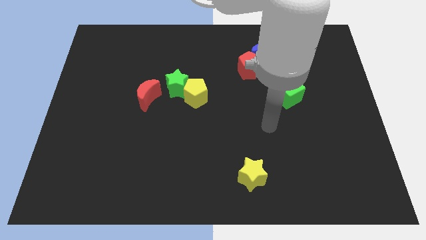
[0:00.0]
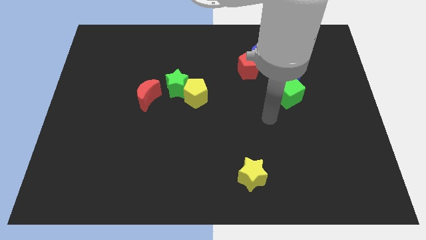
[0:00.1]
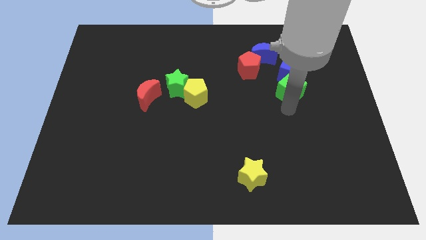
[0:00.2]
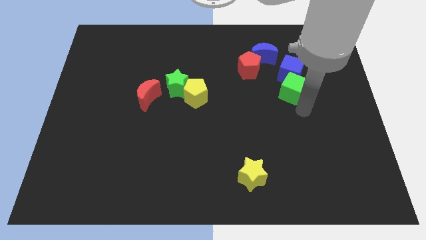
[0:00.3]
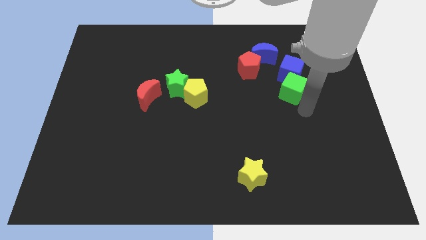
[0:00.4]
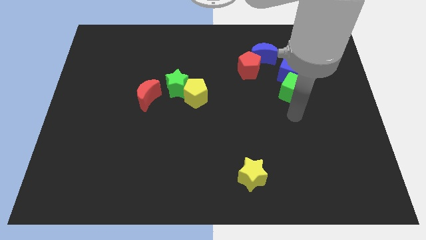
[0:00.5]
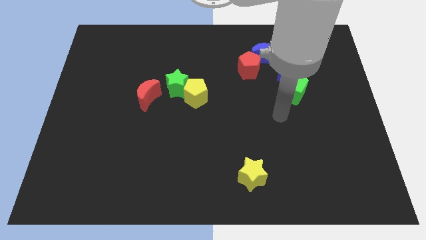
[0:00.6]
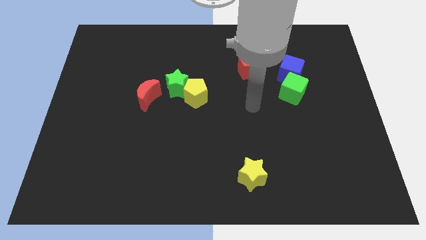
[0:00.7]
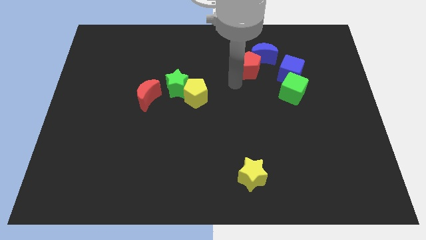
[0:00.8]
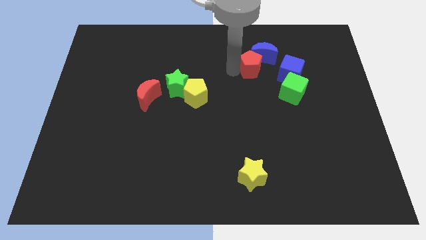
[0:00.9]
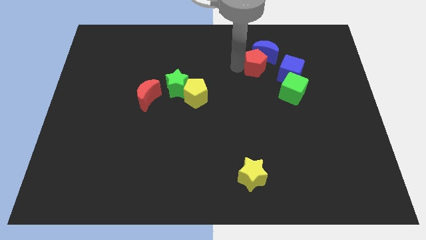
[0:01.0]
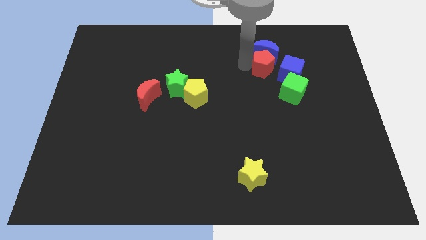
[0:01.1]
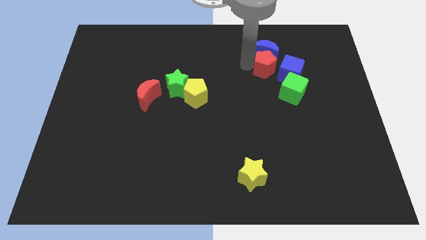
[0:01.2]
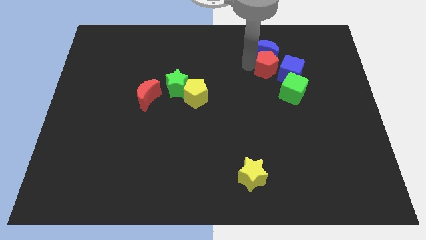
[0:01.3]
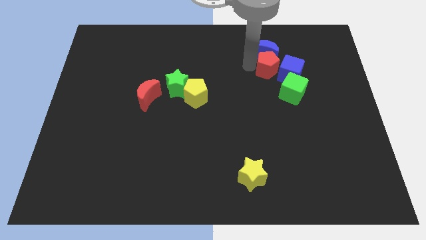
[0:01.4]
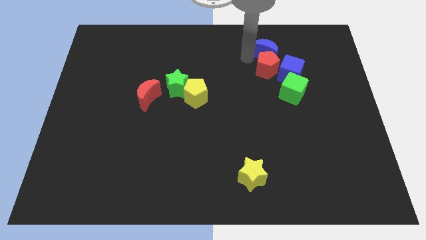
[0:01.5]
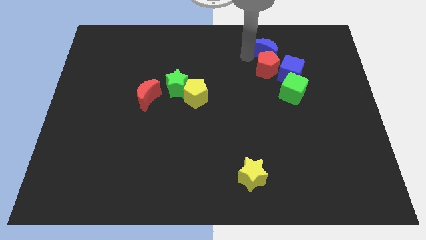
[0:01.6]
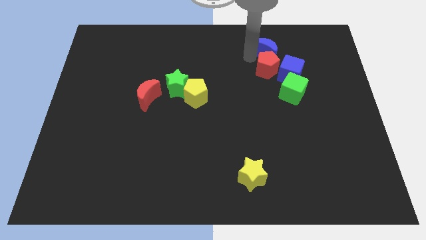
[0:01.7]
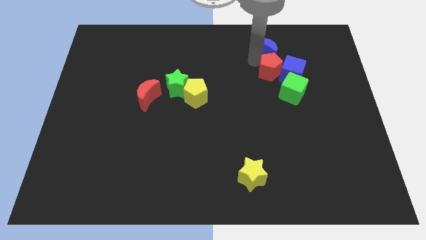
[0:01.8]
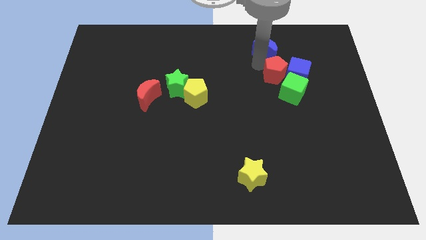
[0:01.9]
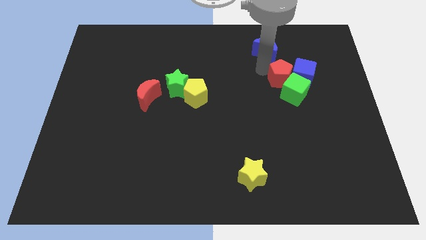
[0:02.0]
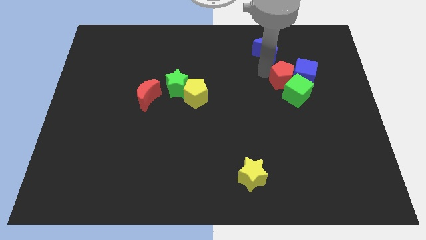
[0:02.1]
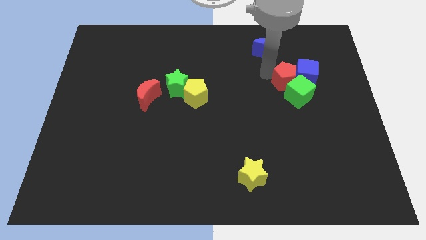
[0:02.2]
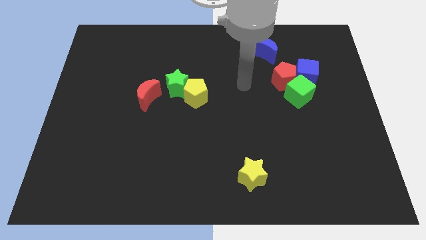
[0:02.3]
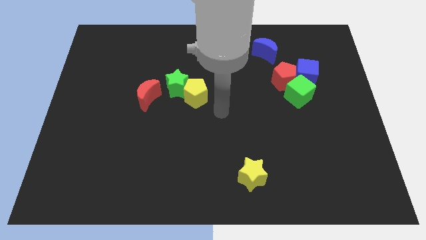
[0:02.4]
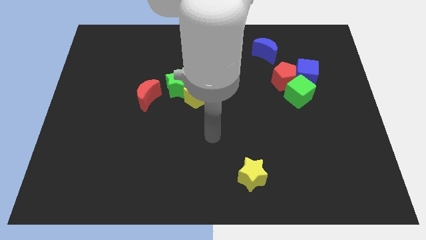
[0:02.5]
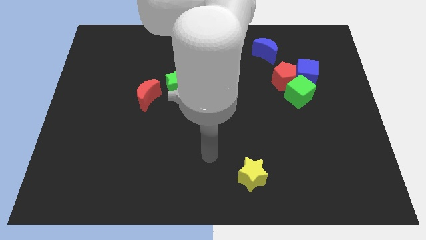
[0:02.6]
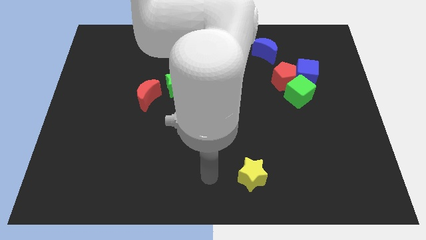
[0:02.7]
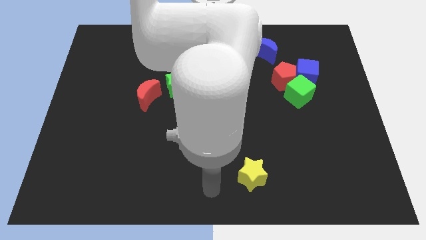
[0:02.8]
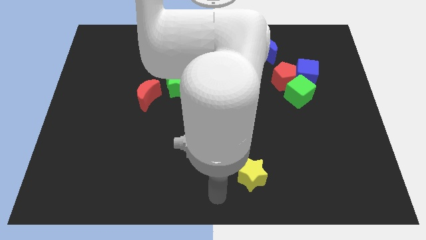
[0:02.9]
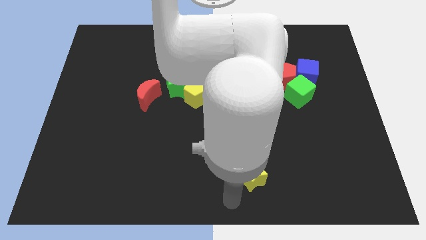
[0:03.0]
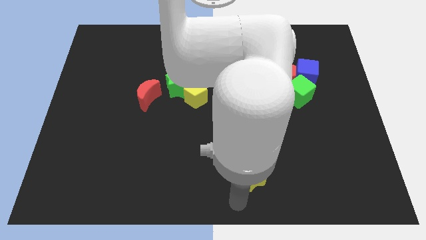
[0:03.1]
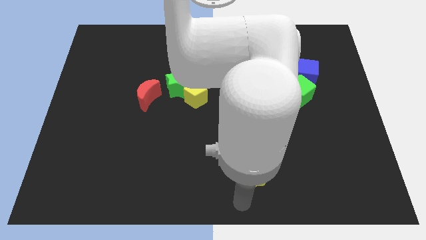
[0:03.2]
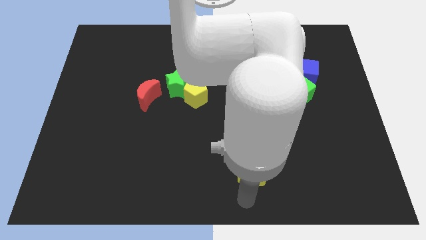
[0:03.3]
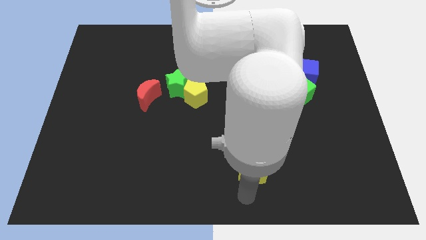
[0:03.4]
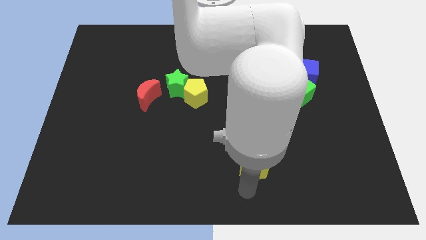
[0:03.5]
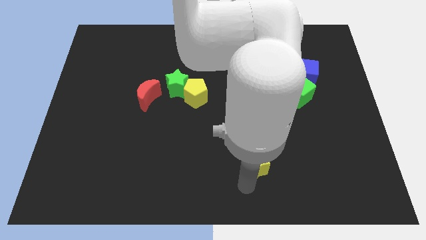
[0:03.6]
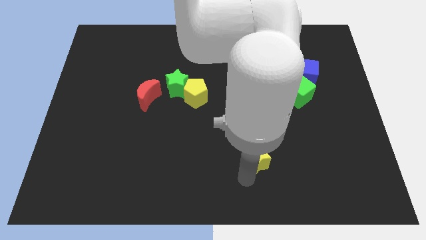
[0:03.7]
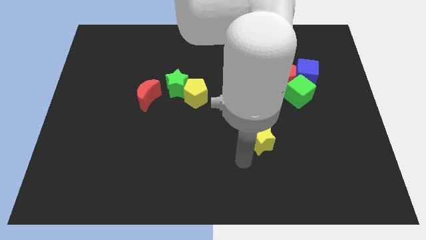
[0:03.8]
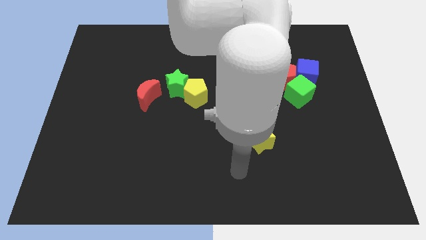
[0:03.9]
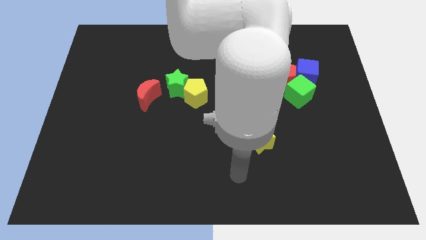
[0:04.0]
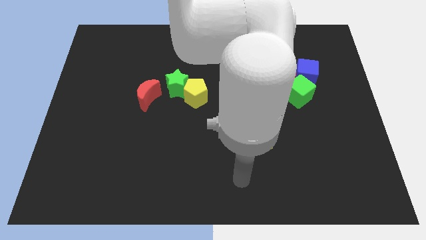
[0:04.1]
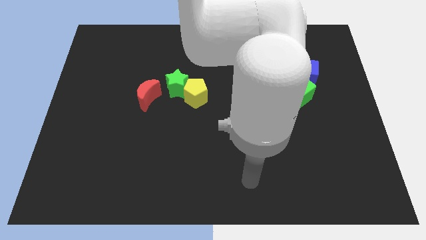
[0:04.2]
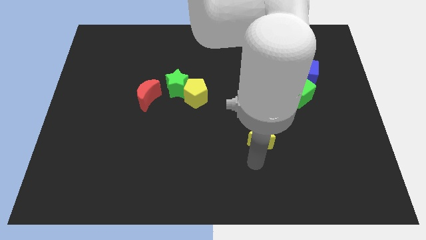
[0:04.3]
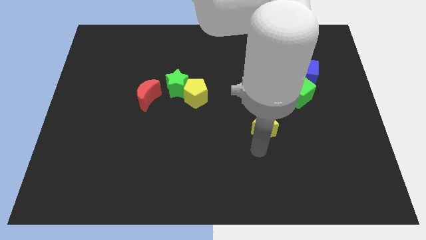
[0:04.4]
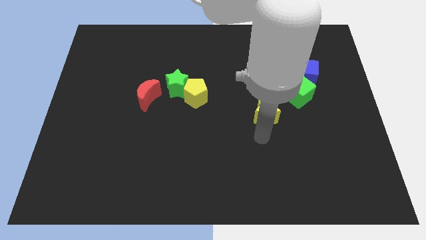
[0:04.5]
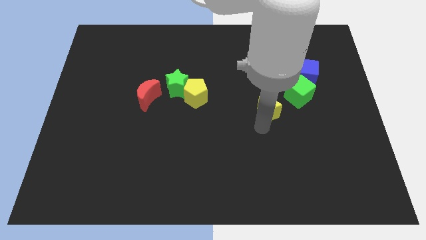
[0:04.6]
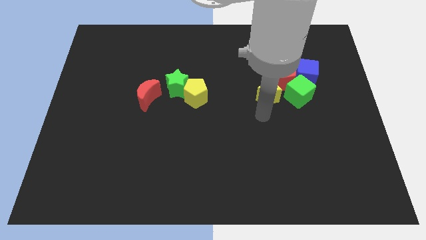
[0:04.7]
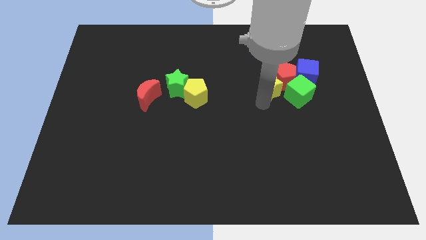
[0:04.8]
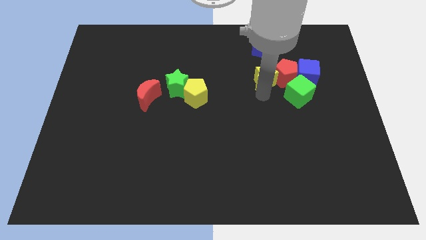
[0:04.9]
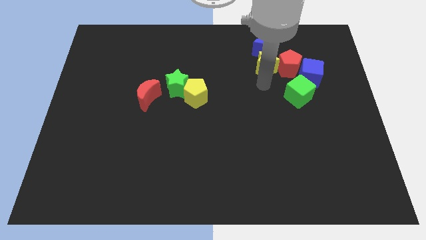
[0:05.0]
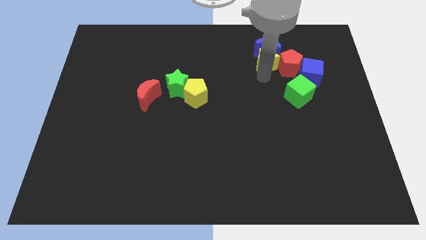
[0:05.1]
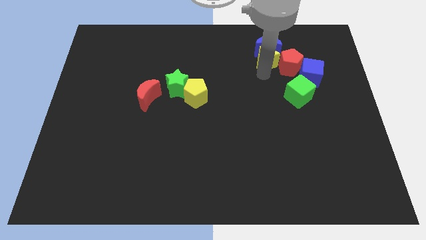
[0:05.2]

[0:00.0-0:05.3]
move the yellow star to the blue moon

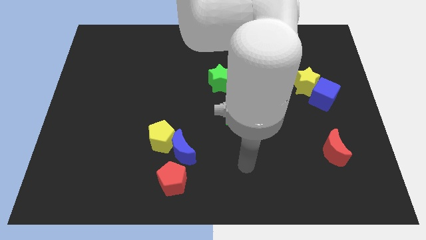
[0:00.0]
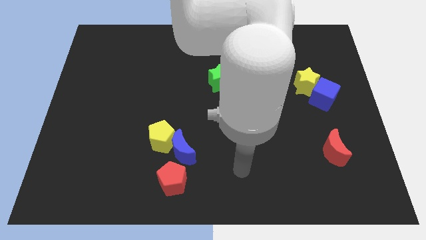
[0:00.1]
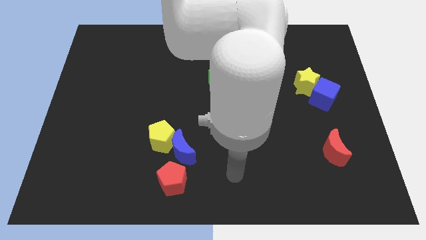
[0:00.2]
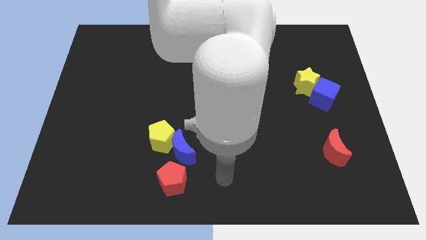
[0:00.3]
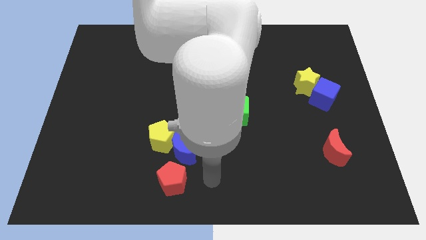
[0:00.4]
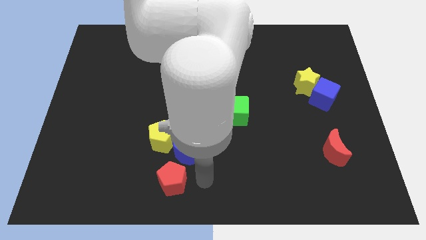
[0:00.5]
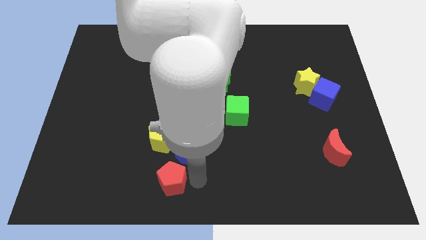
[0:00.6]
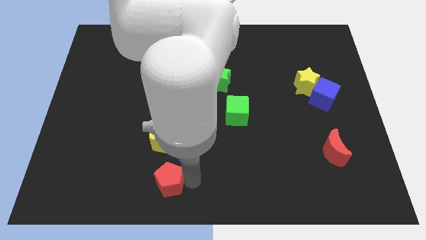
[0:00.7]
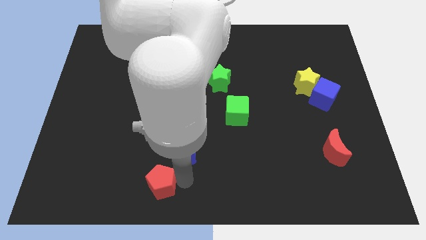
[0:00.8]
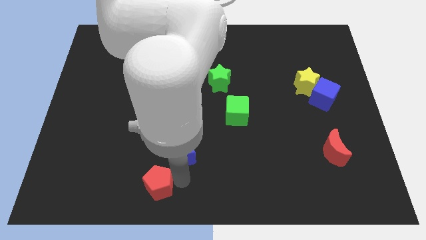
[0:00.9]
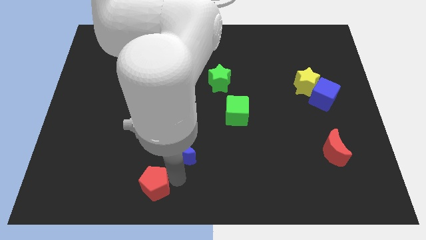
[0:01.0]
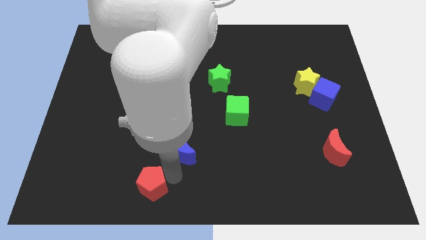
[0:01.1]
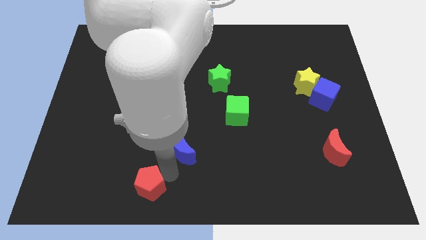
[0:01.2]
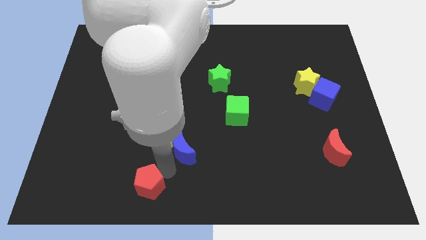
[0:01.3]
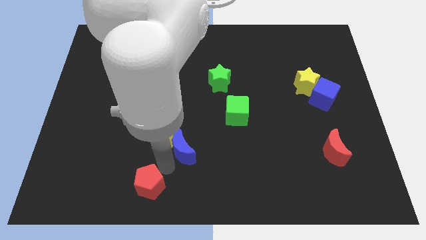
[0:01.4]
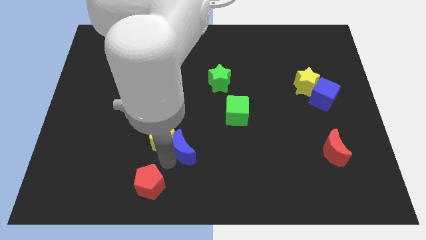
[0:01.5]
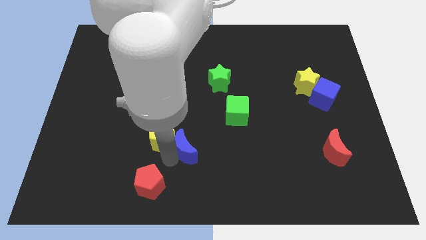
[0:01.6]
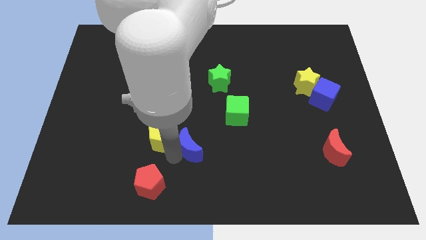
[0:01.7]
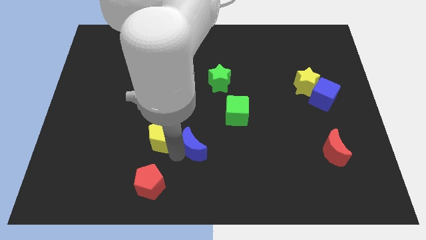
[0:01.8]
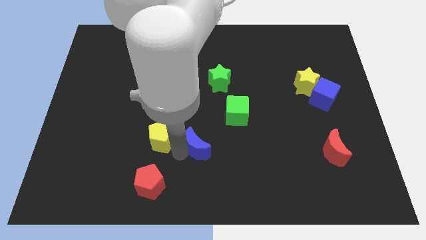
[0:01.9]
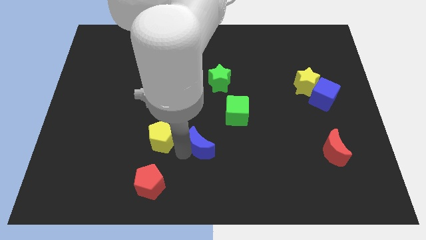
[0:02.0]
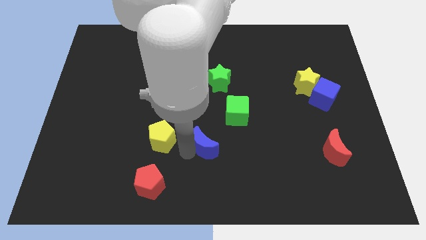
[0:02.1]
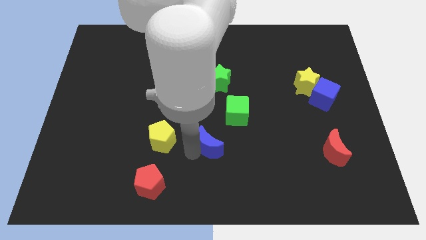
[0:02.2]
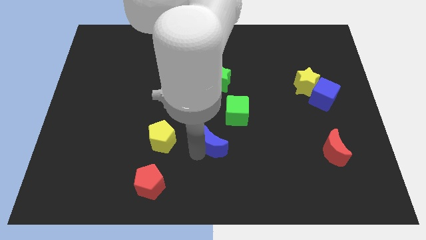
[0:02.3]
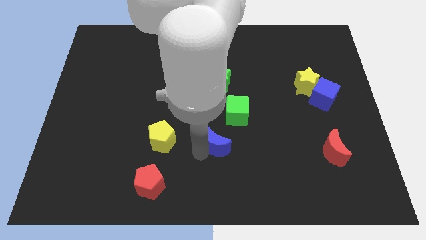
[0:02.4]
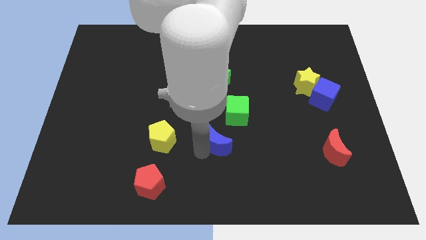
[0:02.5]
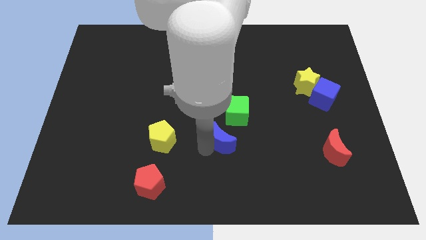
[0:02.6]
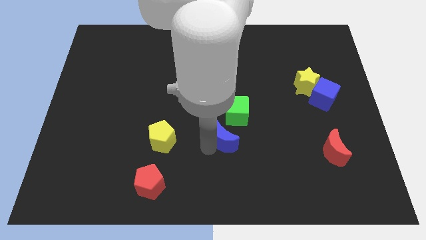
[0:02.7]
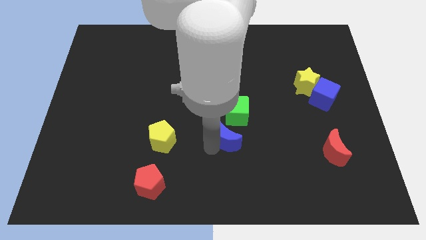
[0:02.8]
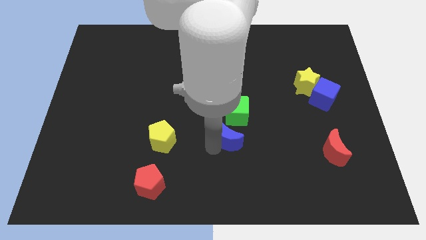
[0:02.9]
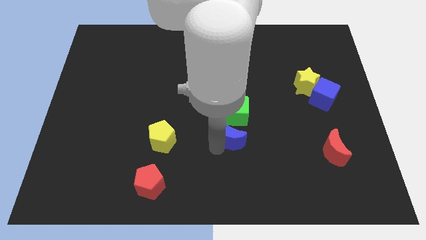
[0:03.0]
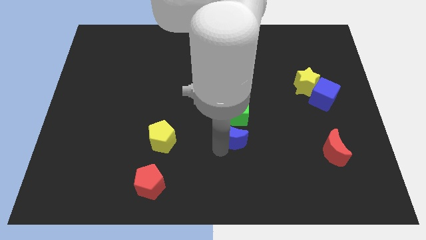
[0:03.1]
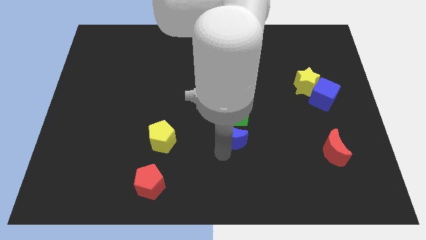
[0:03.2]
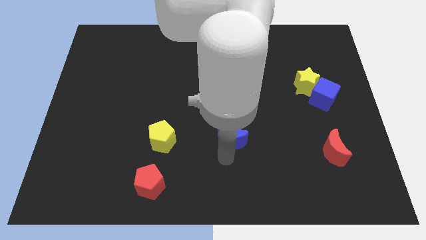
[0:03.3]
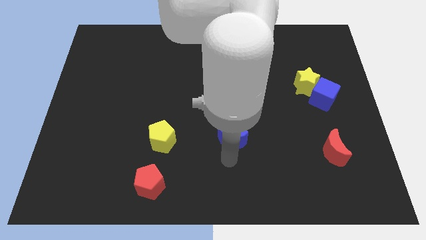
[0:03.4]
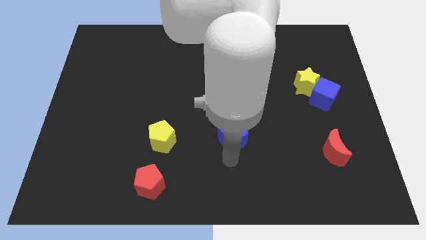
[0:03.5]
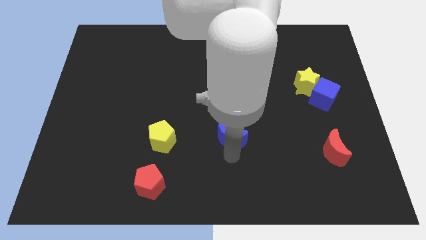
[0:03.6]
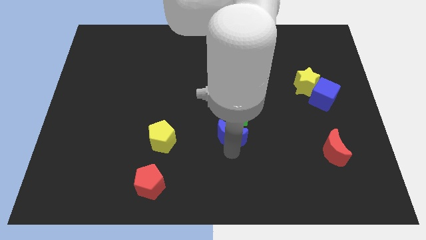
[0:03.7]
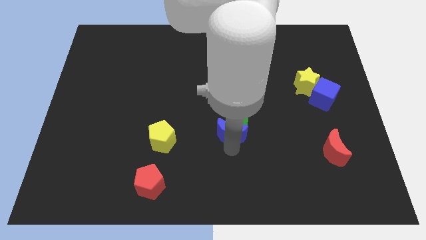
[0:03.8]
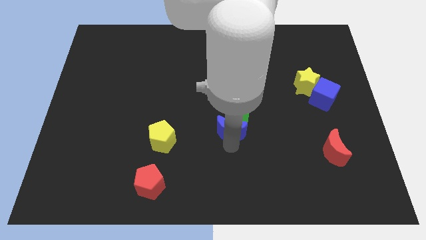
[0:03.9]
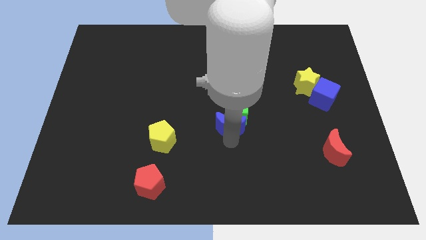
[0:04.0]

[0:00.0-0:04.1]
push the blue moon close to the green cube
